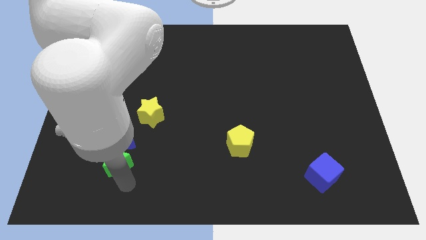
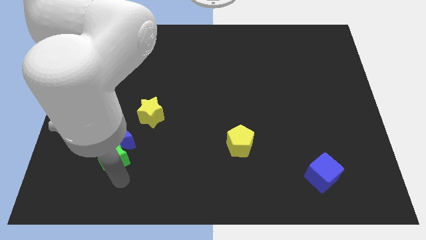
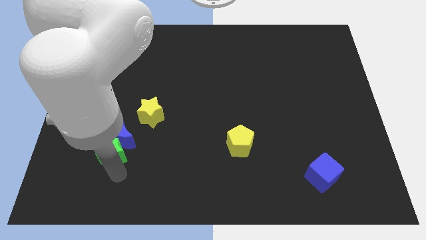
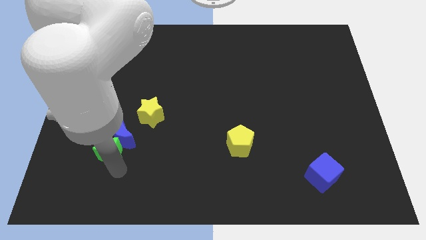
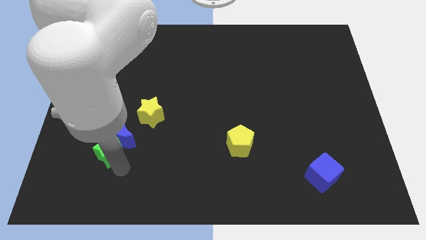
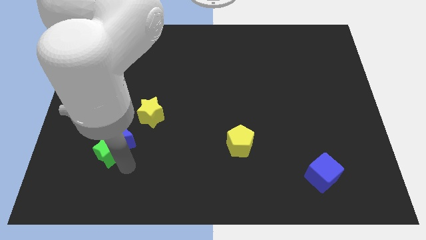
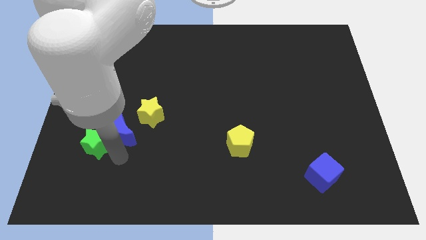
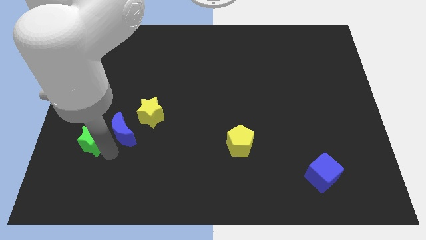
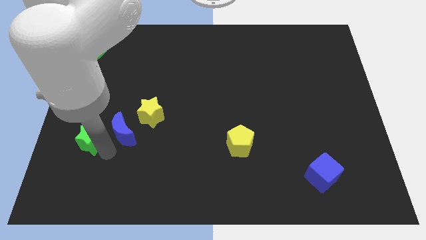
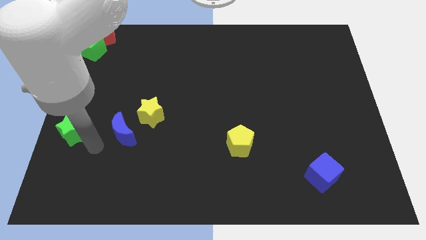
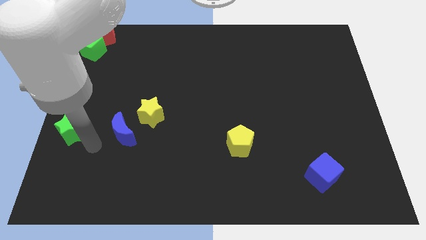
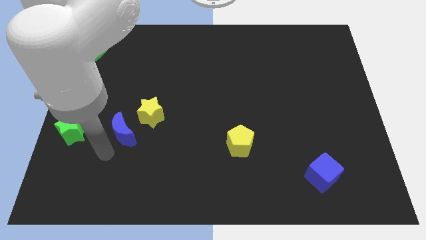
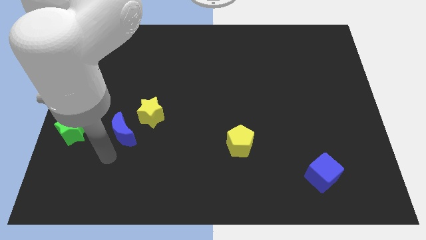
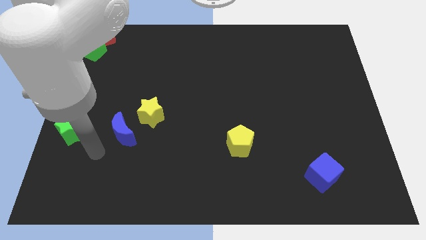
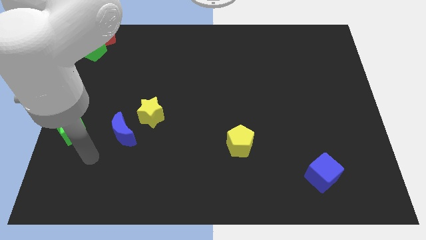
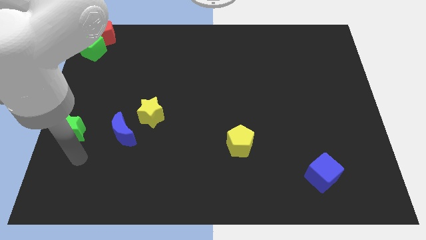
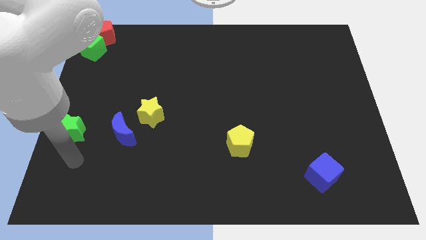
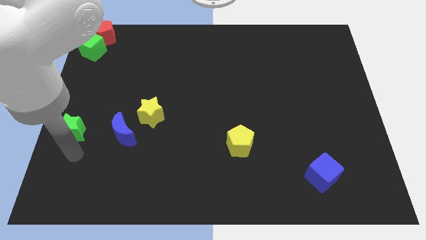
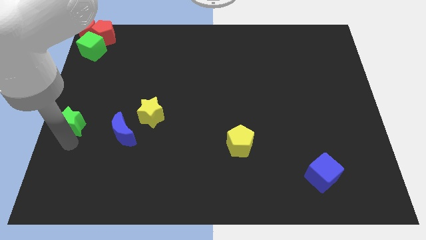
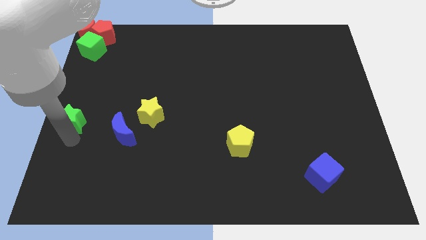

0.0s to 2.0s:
move the green star to the centre left on the board

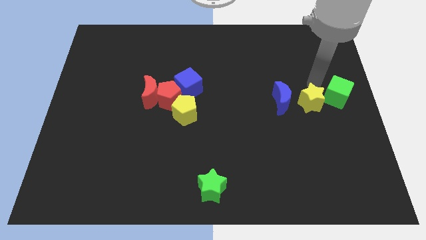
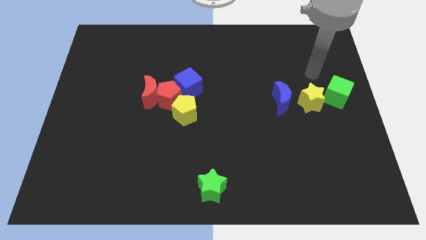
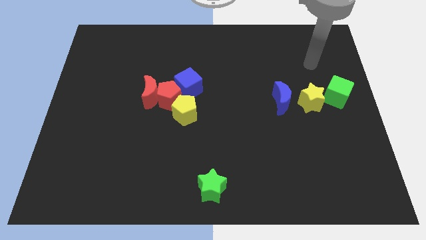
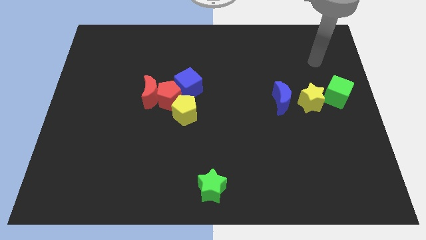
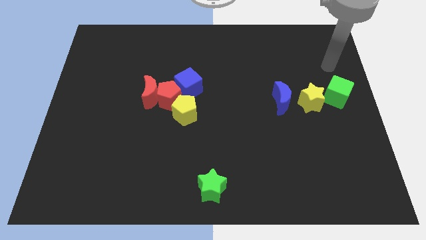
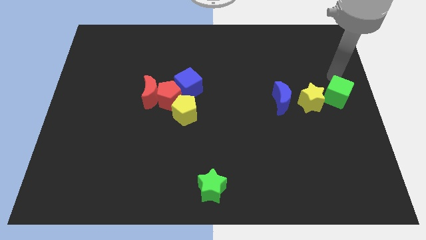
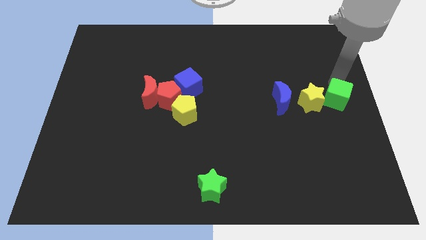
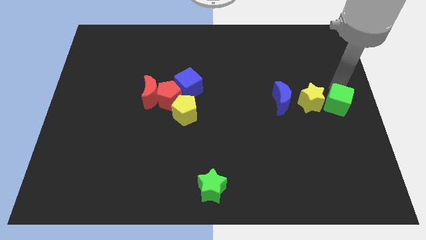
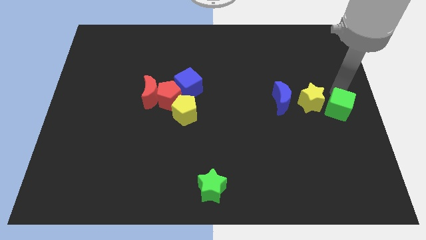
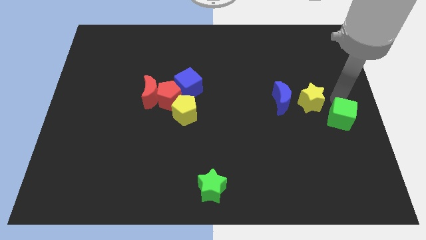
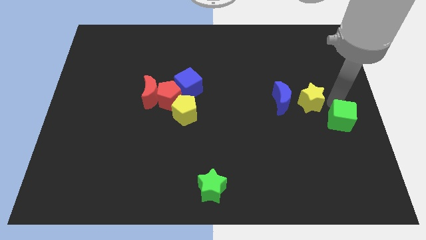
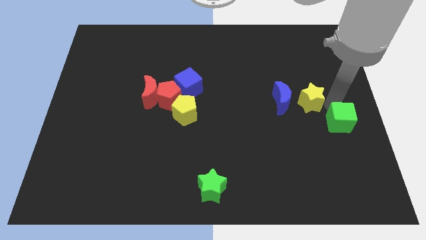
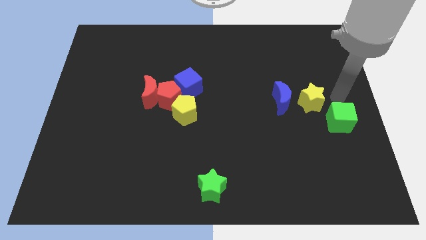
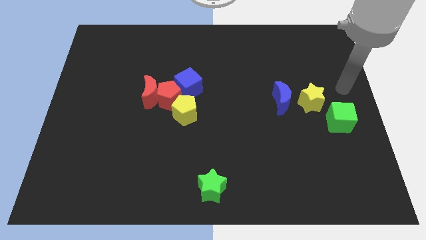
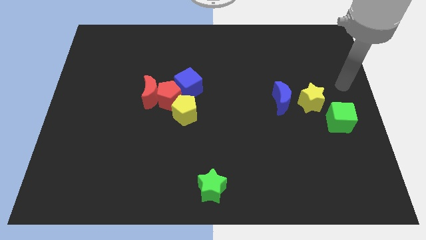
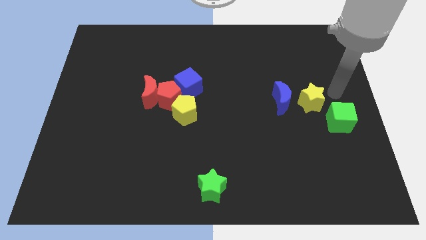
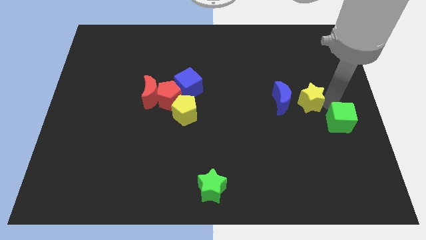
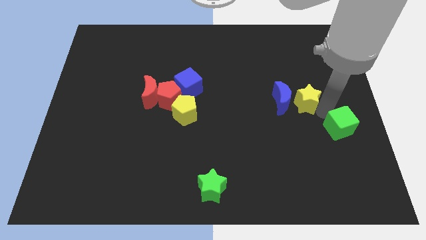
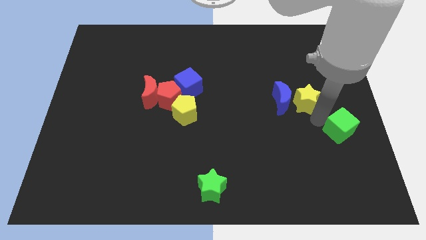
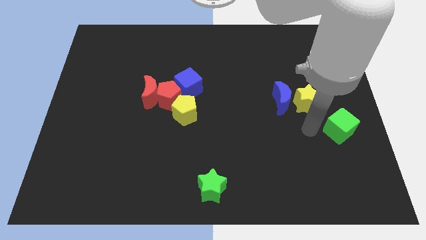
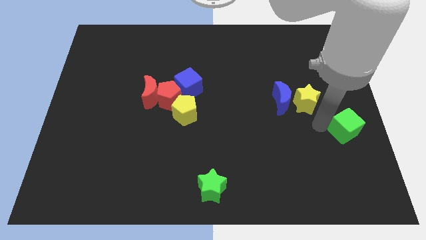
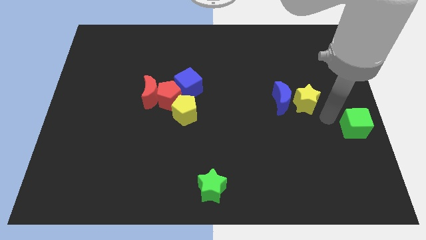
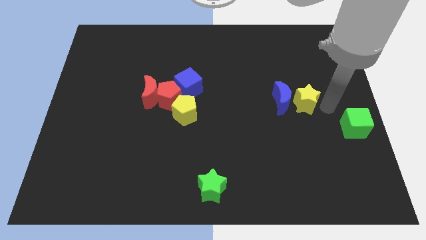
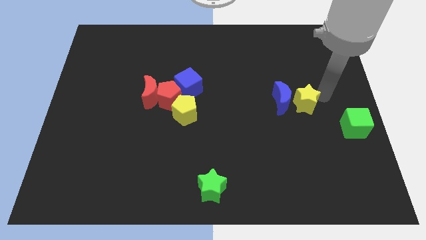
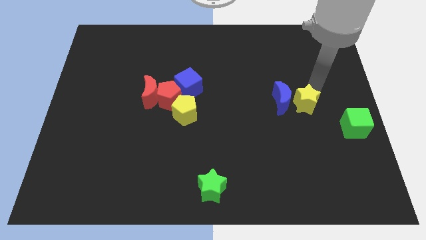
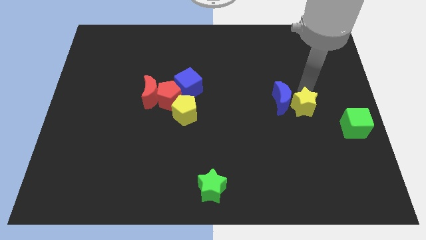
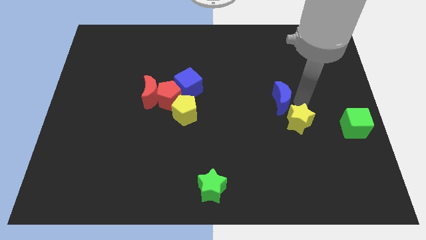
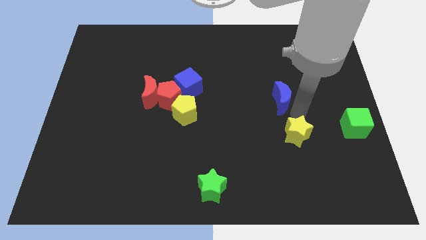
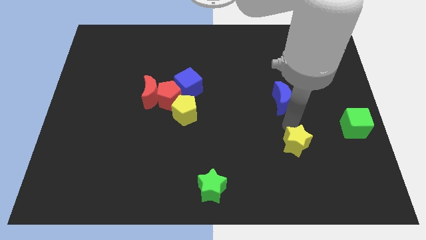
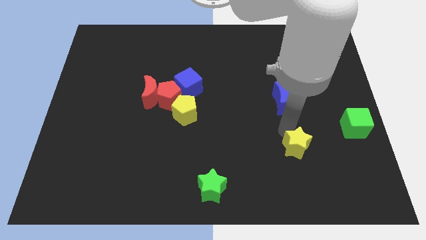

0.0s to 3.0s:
separate the green cube and yellow star to the bottom right

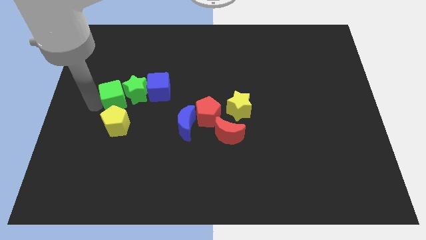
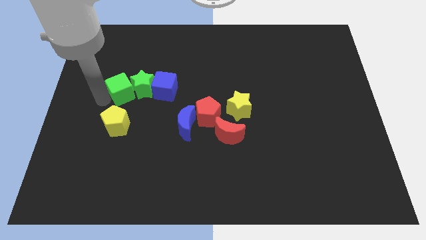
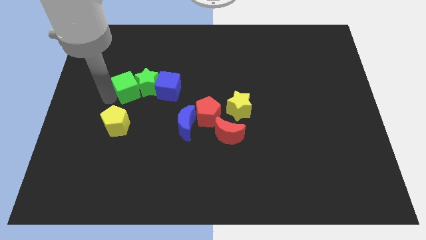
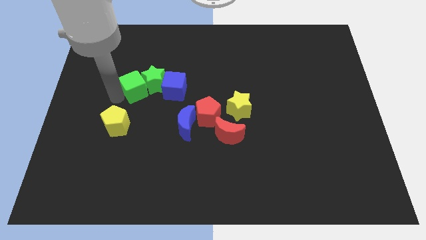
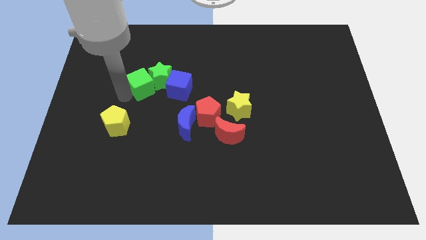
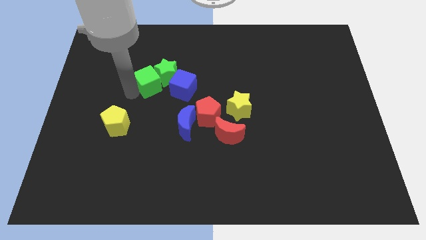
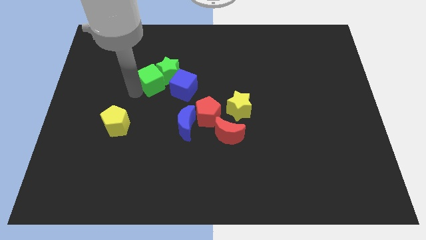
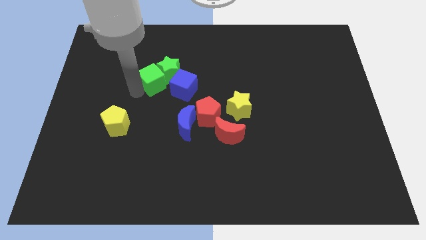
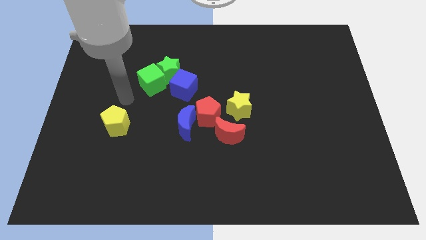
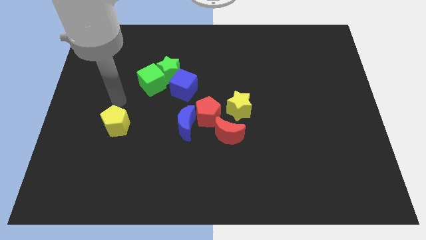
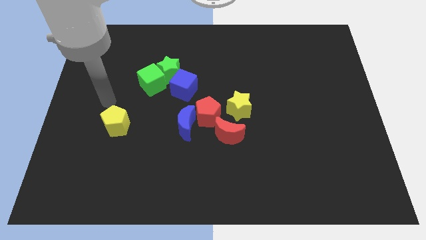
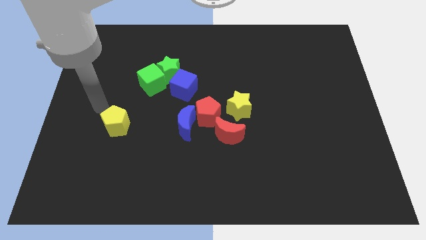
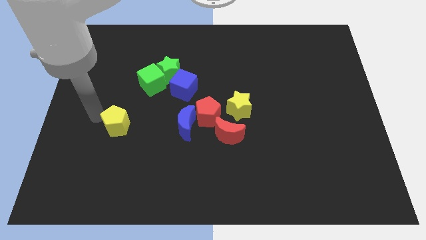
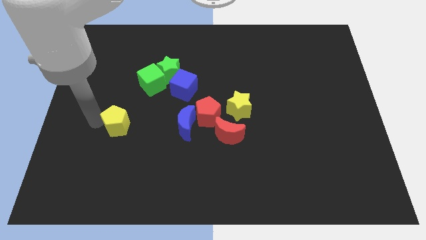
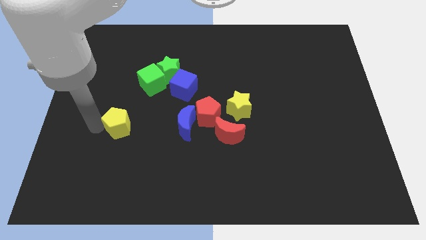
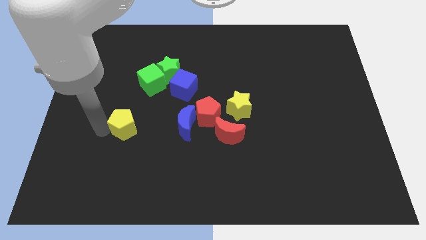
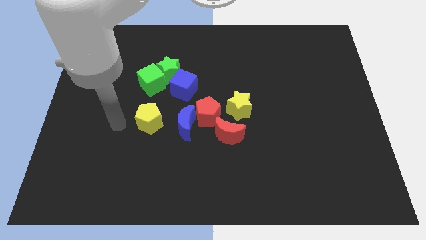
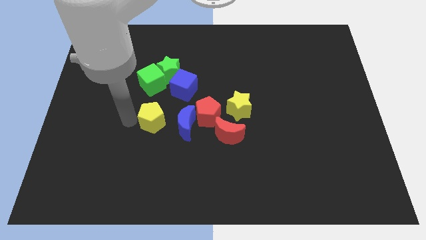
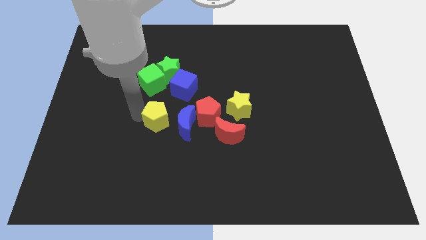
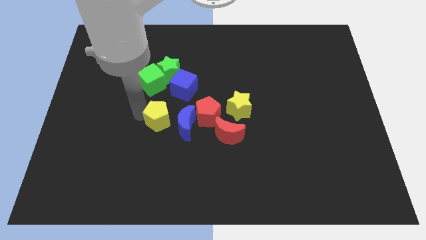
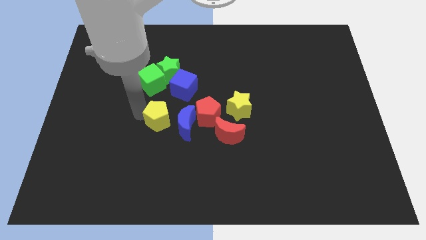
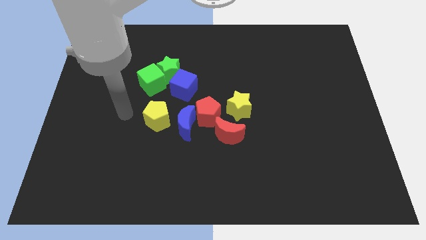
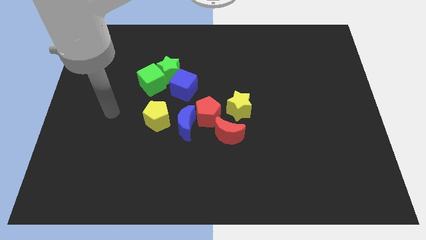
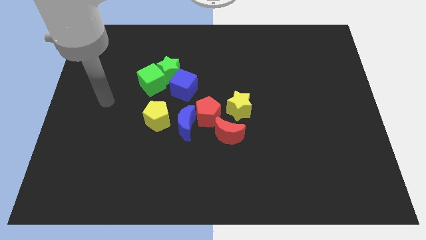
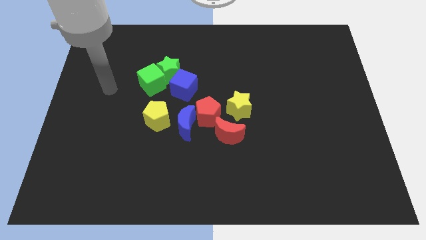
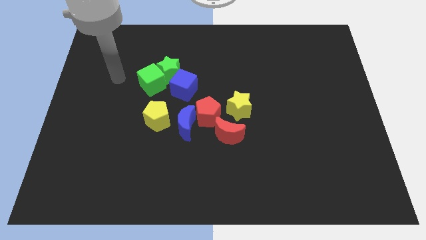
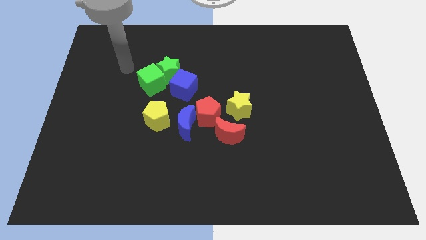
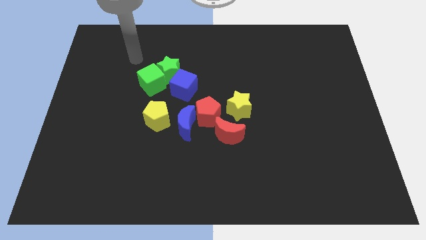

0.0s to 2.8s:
move the yellow pentagon close to the blue semicircle

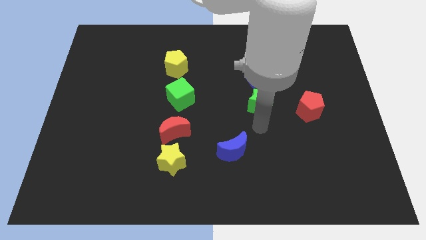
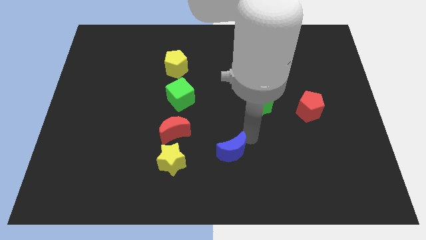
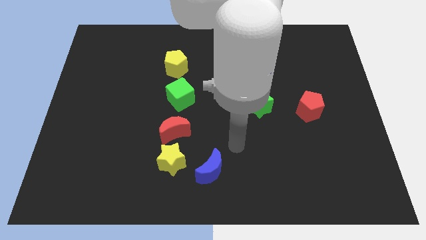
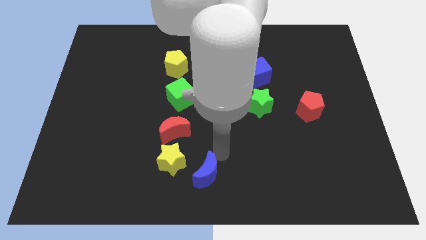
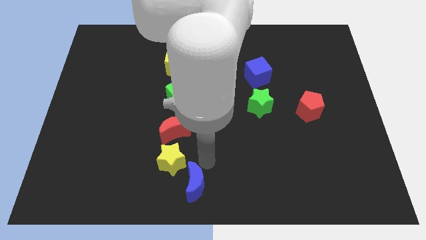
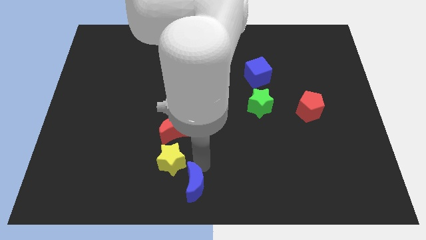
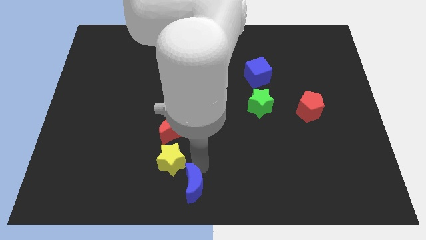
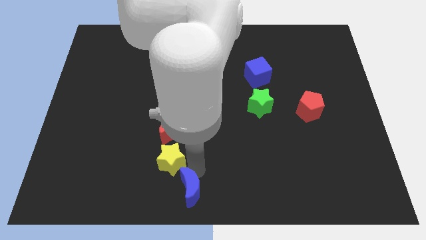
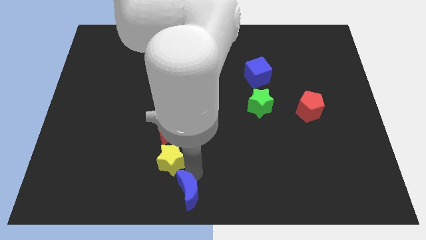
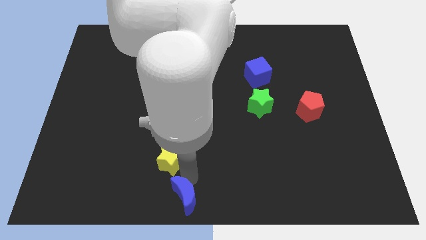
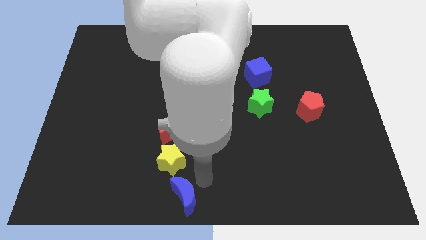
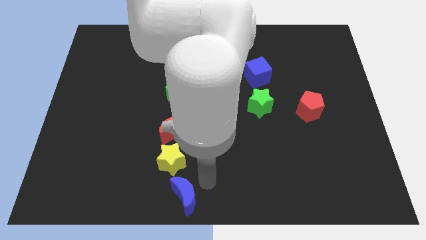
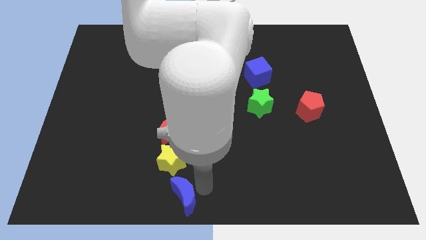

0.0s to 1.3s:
move blue moon to the bottom of yellow star
